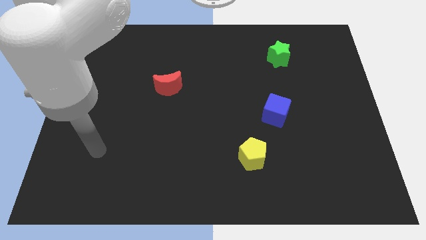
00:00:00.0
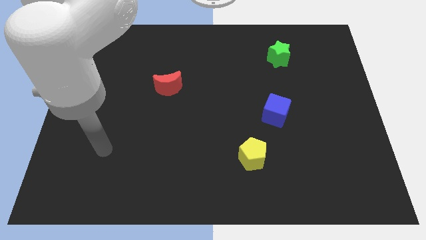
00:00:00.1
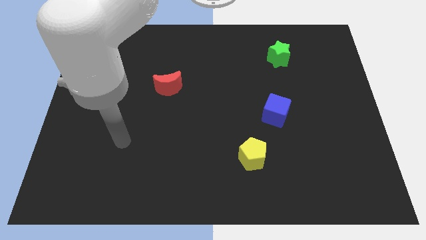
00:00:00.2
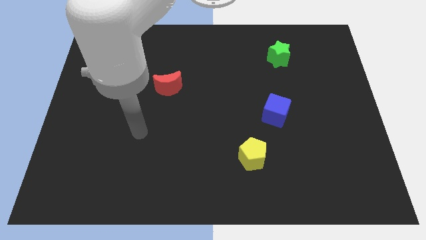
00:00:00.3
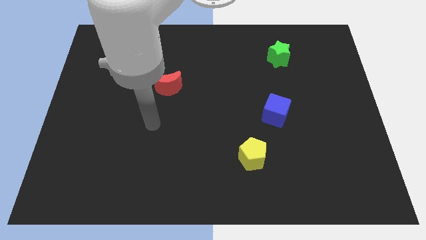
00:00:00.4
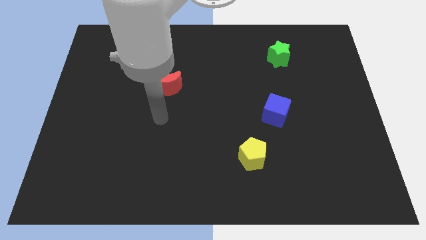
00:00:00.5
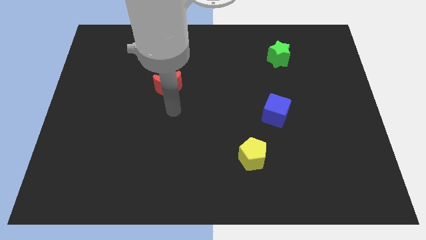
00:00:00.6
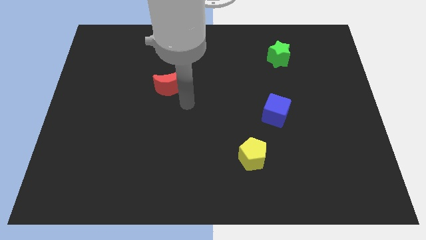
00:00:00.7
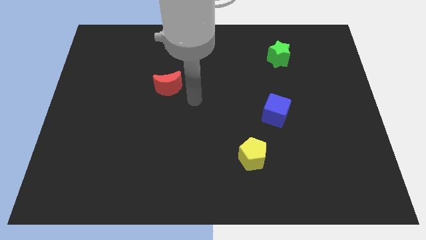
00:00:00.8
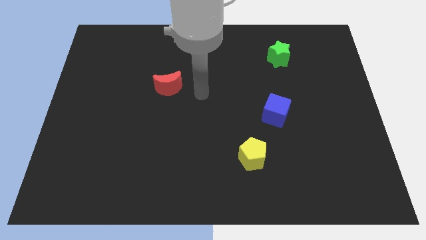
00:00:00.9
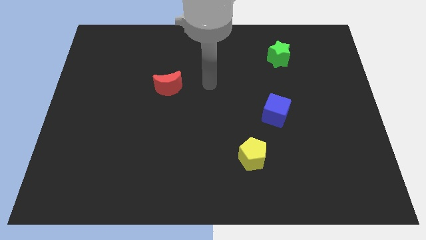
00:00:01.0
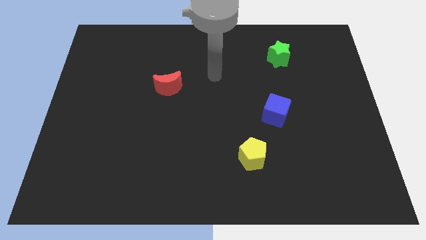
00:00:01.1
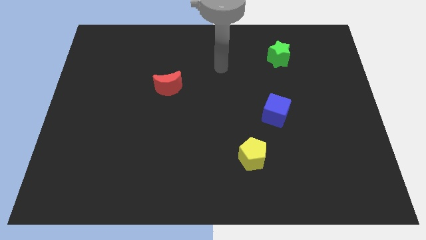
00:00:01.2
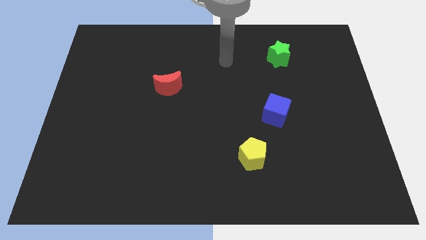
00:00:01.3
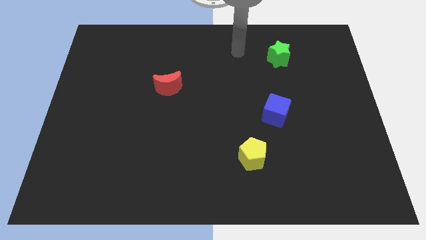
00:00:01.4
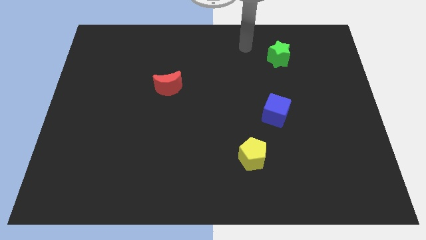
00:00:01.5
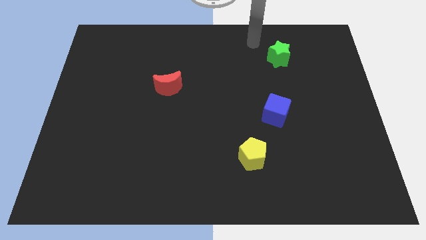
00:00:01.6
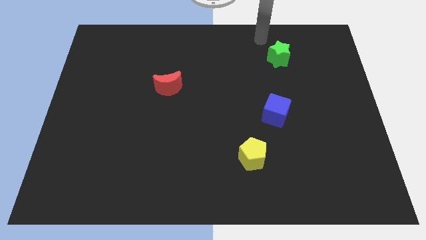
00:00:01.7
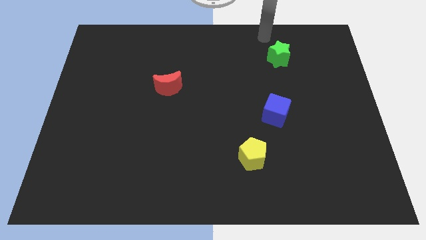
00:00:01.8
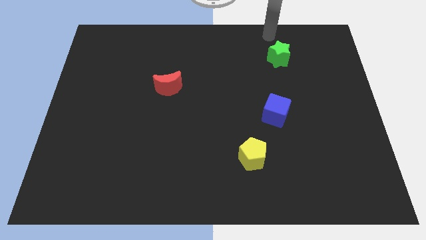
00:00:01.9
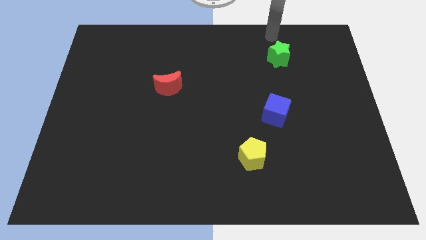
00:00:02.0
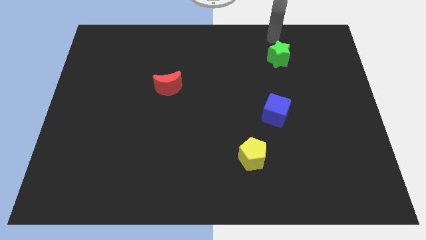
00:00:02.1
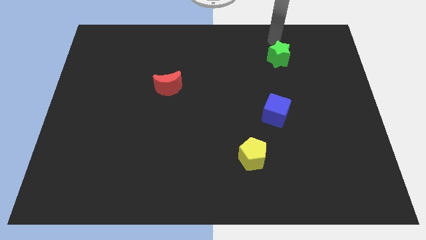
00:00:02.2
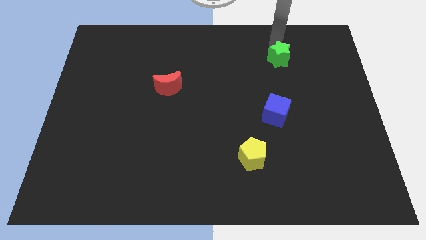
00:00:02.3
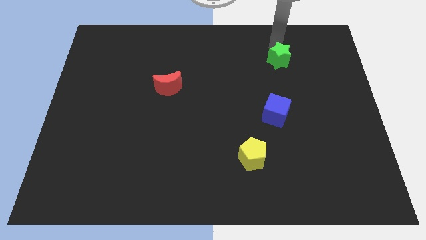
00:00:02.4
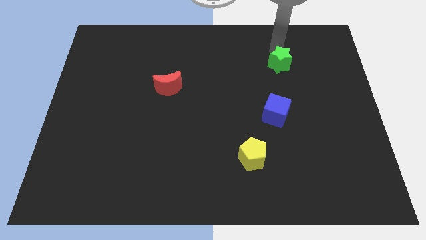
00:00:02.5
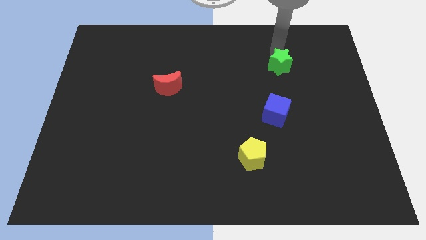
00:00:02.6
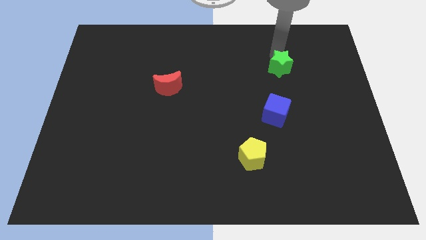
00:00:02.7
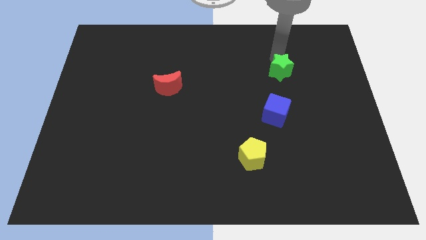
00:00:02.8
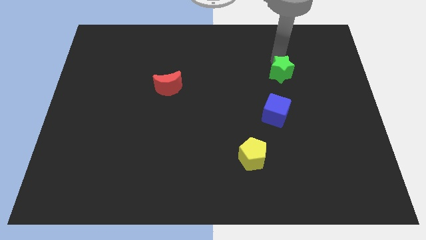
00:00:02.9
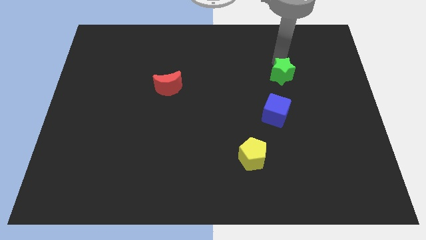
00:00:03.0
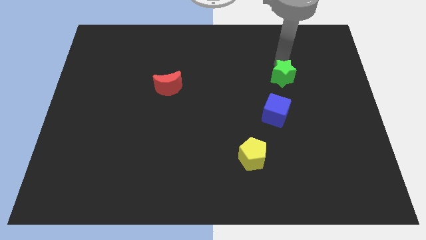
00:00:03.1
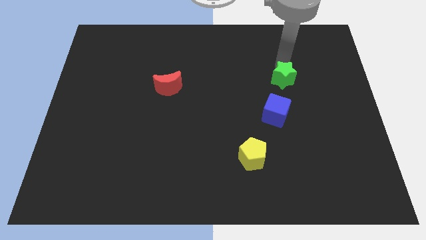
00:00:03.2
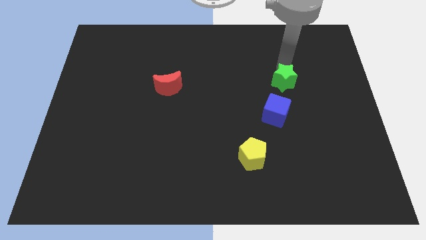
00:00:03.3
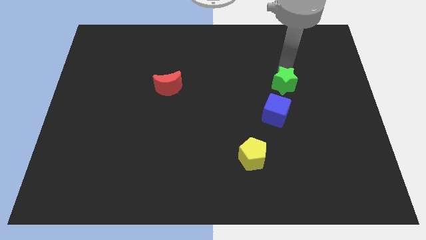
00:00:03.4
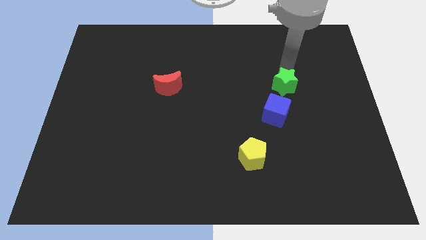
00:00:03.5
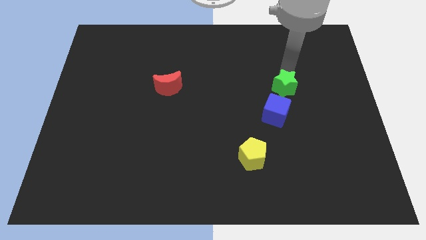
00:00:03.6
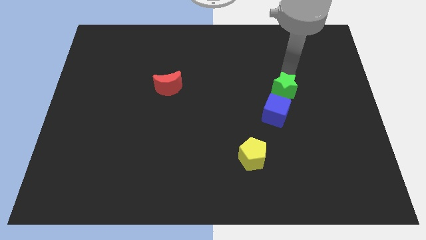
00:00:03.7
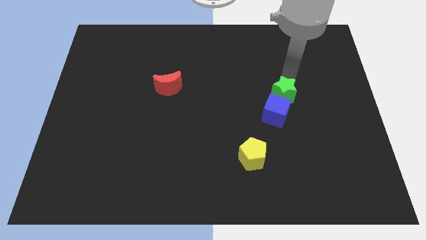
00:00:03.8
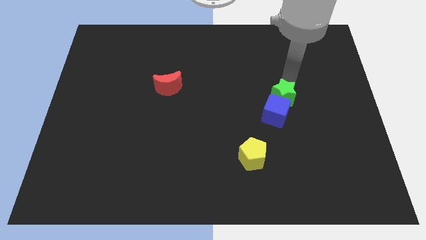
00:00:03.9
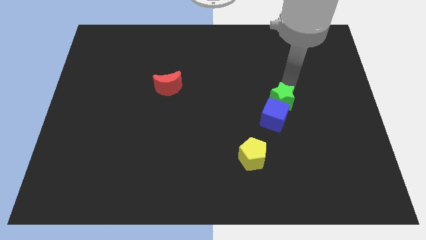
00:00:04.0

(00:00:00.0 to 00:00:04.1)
slide the star close to the cube

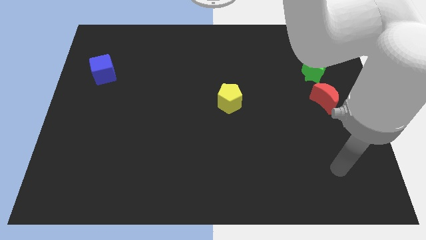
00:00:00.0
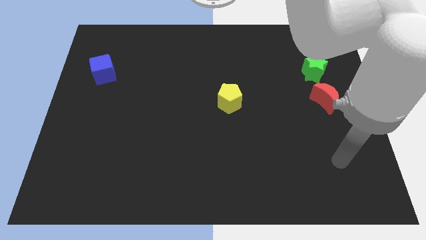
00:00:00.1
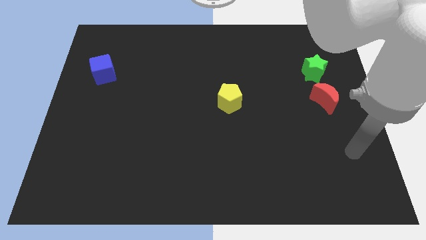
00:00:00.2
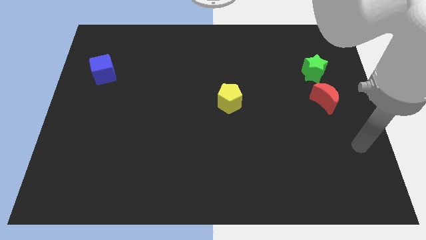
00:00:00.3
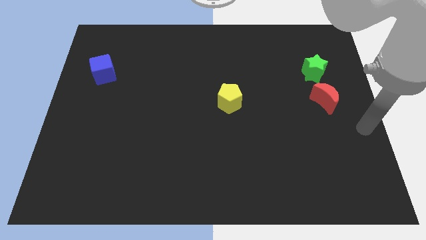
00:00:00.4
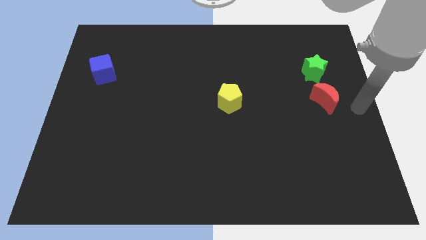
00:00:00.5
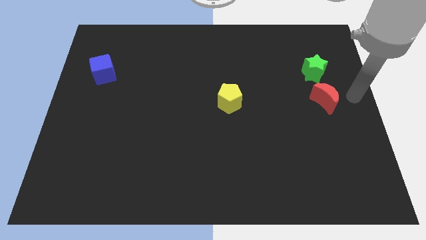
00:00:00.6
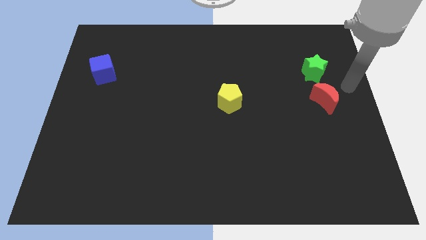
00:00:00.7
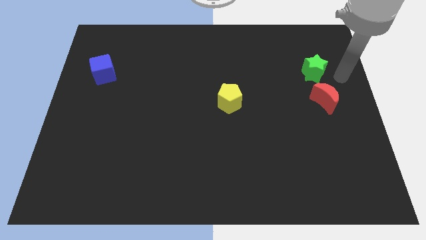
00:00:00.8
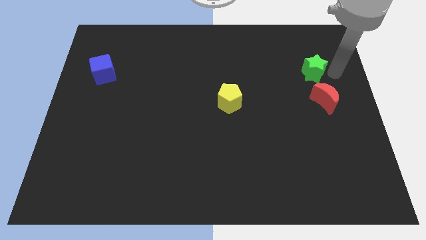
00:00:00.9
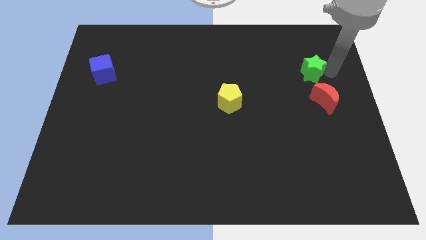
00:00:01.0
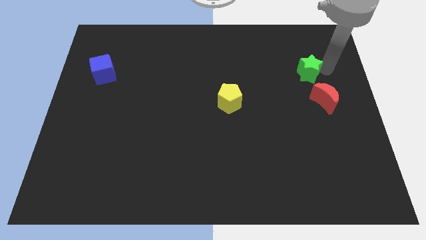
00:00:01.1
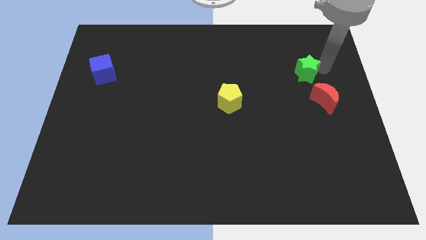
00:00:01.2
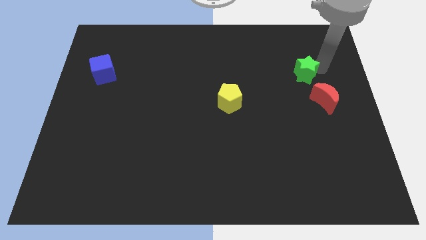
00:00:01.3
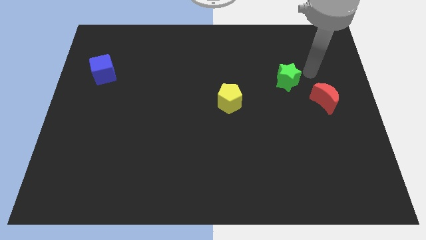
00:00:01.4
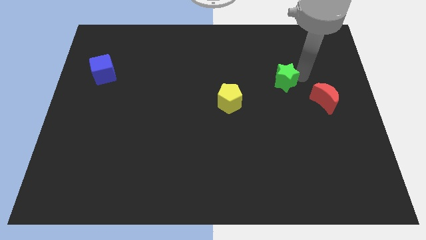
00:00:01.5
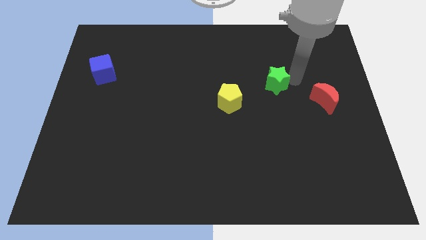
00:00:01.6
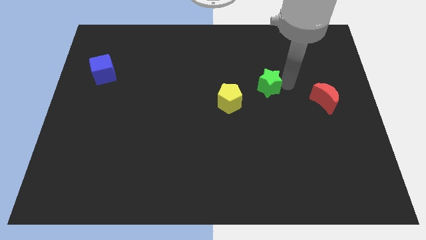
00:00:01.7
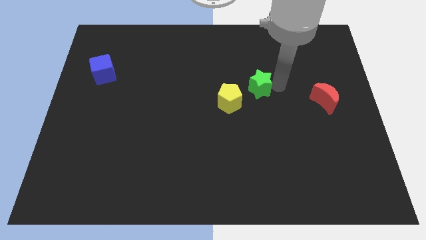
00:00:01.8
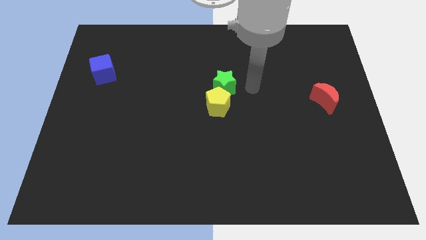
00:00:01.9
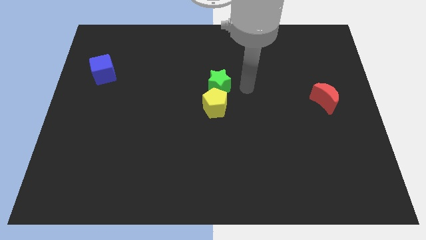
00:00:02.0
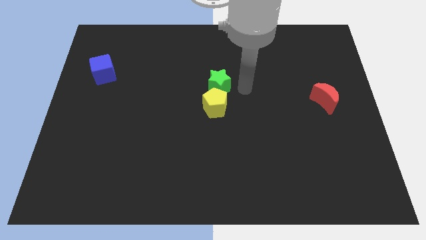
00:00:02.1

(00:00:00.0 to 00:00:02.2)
put the green block towards the yellow block

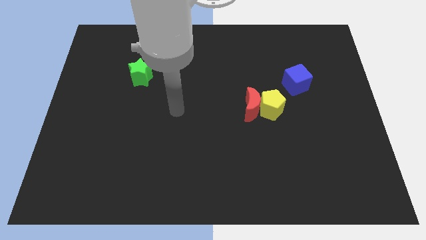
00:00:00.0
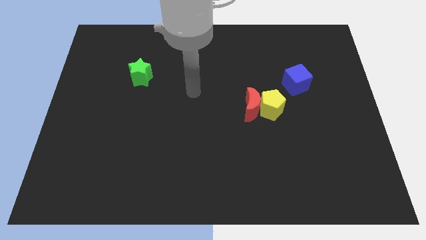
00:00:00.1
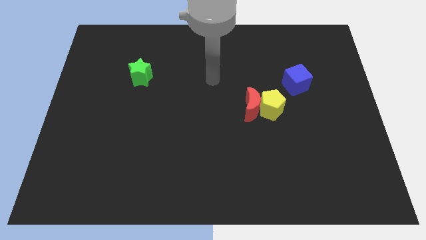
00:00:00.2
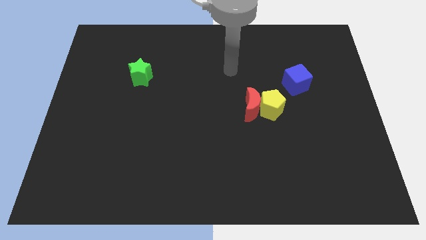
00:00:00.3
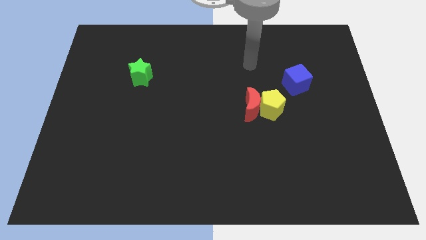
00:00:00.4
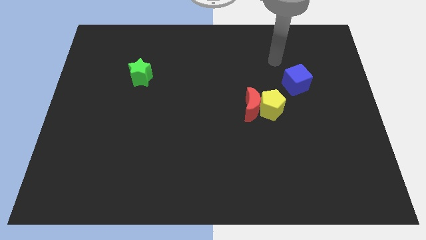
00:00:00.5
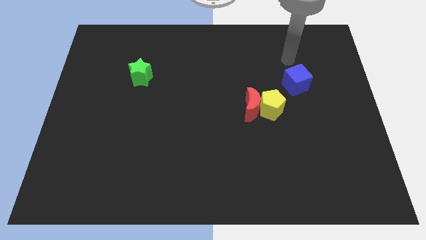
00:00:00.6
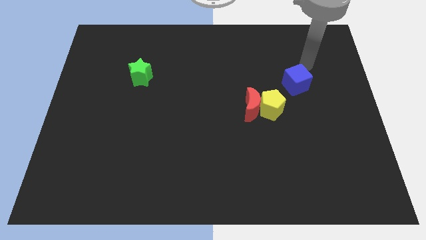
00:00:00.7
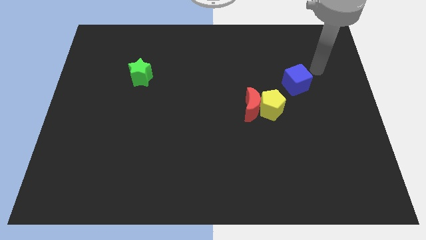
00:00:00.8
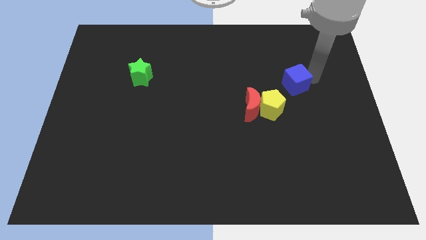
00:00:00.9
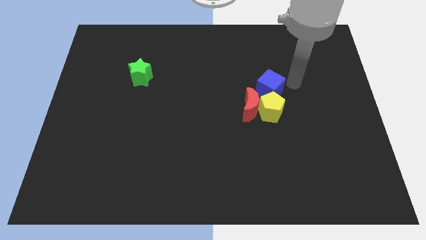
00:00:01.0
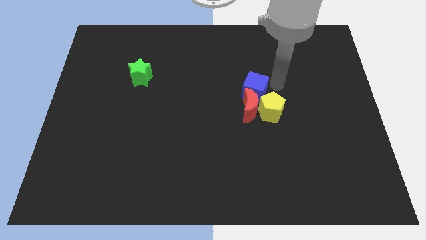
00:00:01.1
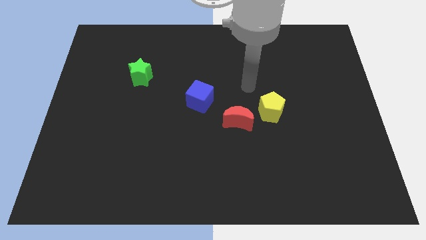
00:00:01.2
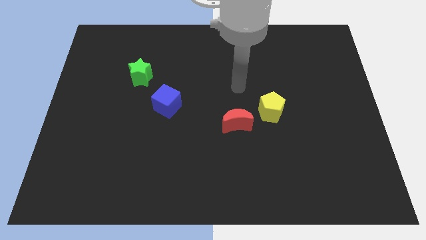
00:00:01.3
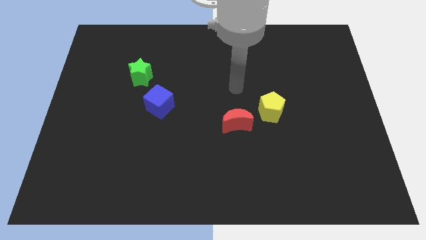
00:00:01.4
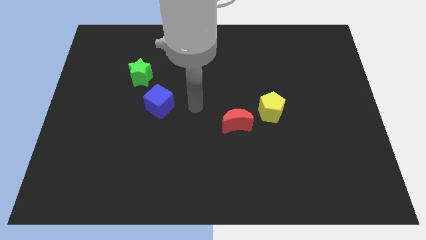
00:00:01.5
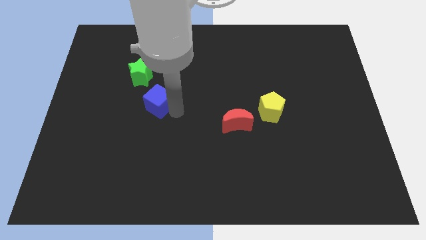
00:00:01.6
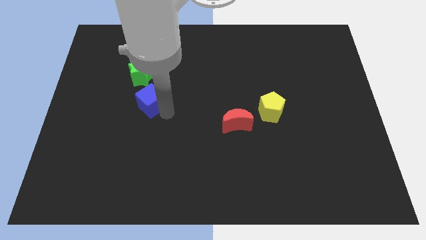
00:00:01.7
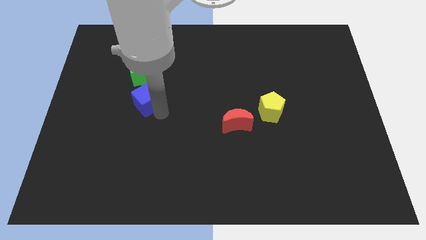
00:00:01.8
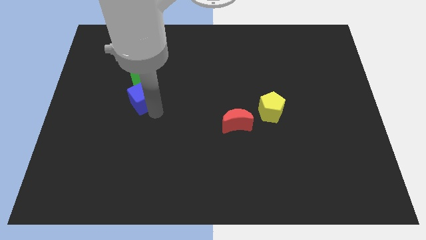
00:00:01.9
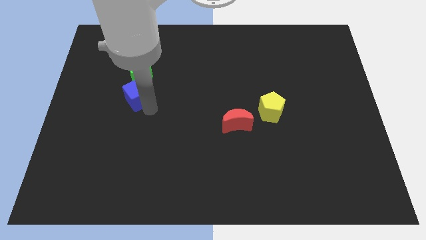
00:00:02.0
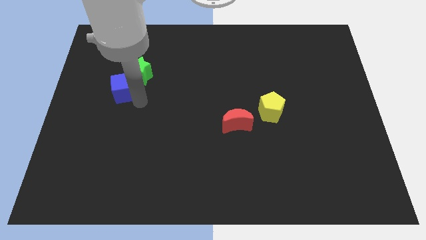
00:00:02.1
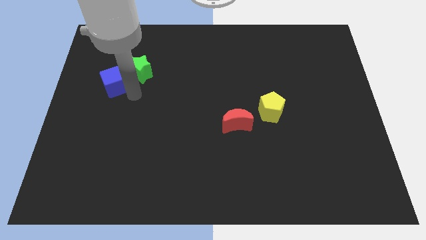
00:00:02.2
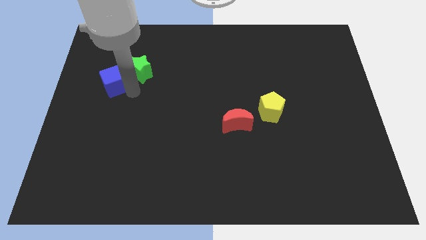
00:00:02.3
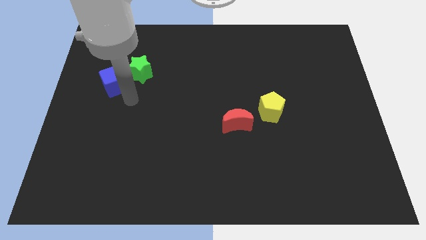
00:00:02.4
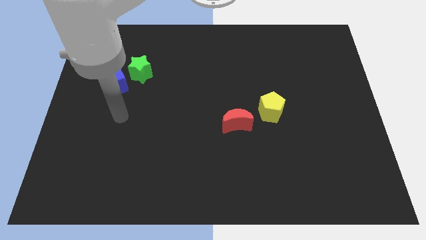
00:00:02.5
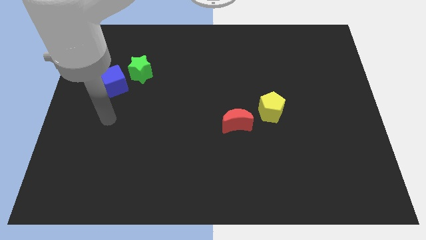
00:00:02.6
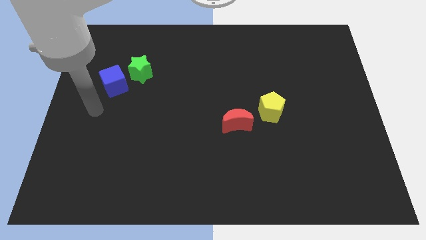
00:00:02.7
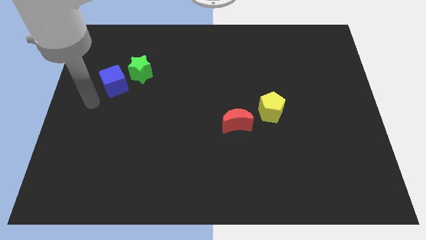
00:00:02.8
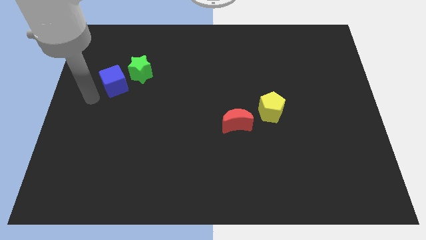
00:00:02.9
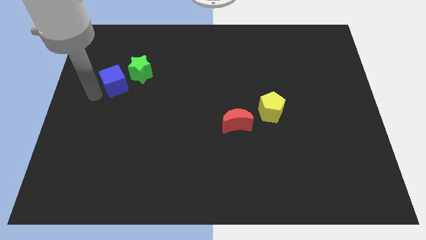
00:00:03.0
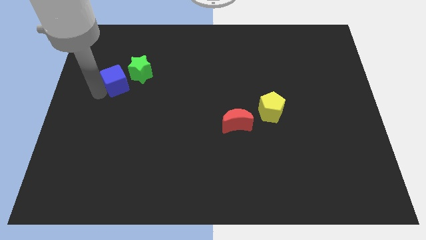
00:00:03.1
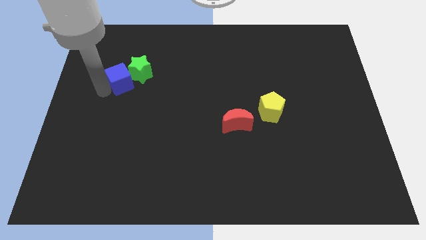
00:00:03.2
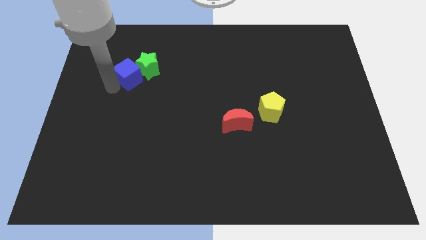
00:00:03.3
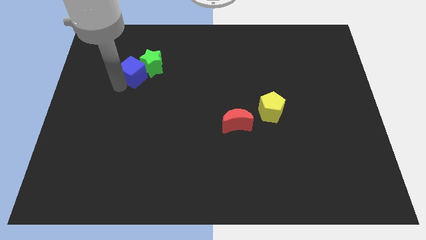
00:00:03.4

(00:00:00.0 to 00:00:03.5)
slide the cube close to the star
